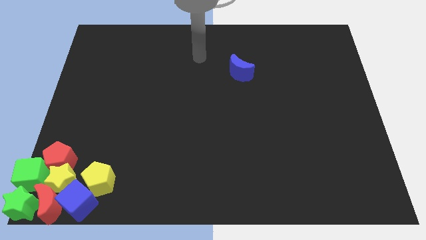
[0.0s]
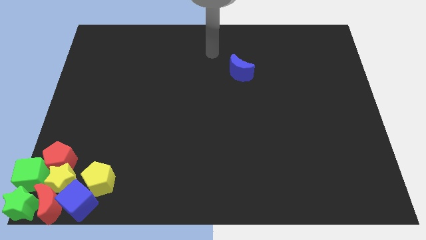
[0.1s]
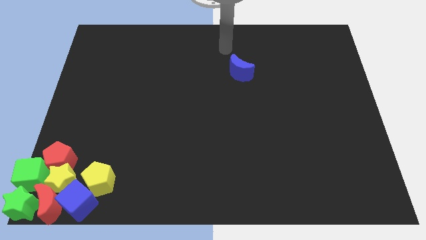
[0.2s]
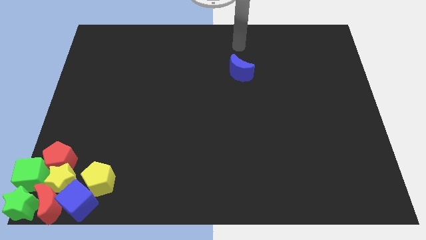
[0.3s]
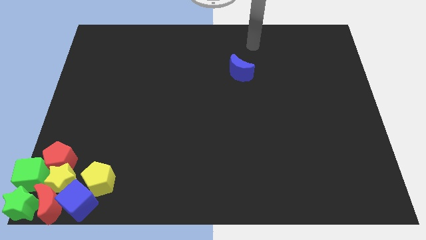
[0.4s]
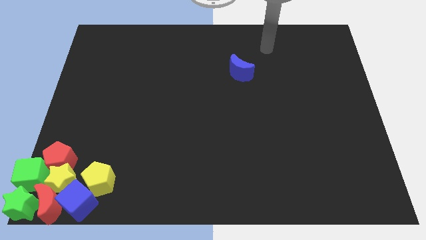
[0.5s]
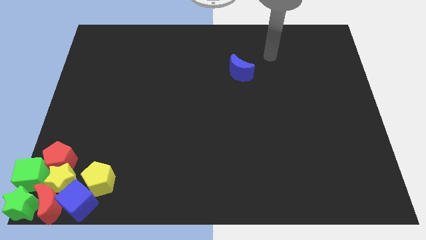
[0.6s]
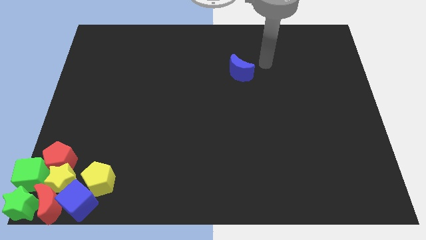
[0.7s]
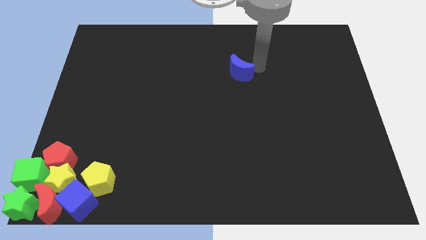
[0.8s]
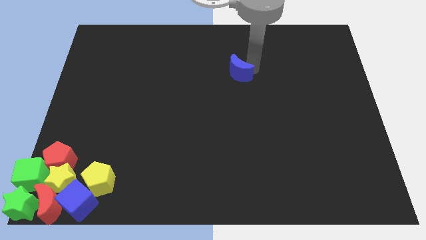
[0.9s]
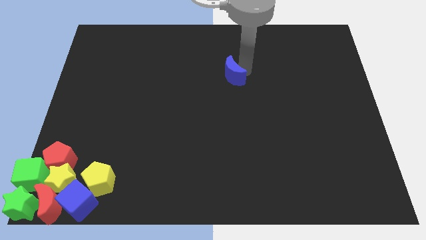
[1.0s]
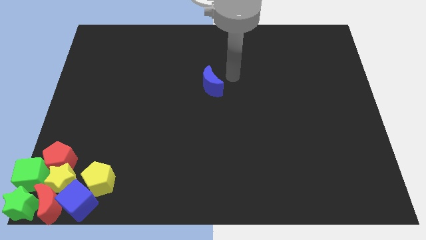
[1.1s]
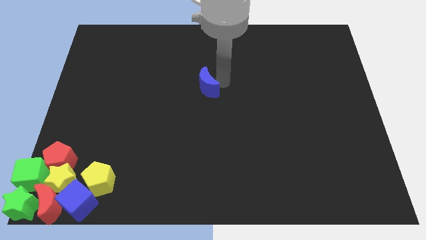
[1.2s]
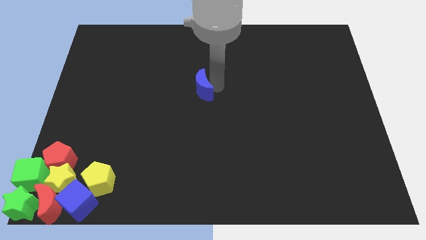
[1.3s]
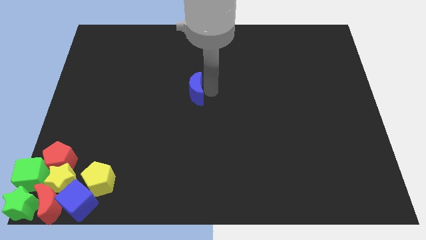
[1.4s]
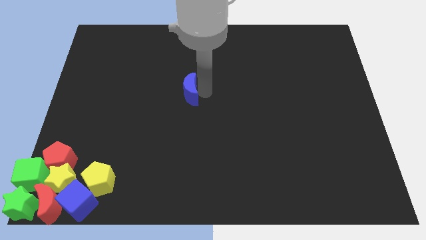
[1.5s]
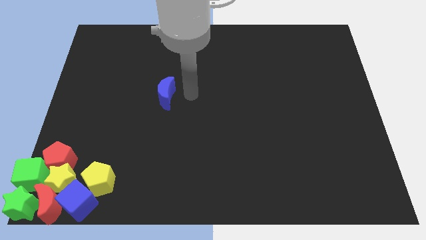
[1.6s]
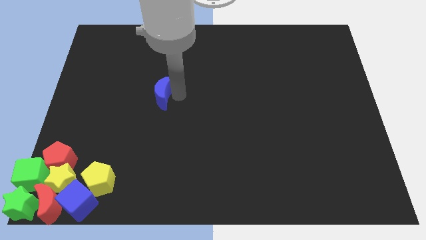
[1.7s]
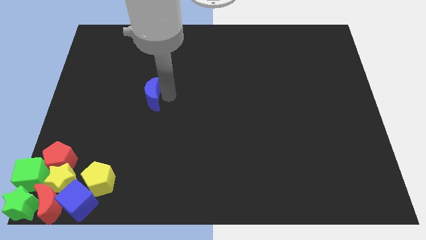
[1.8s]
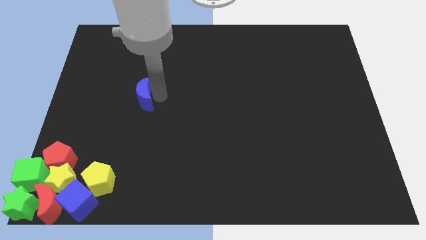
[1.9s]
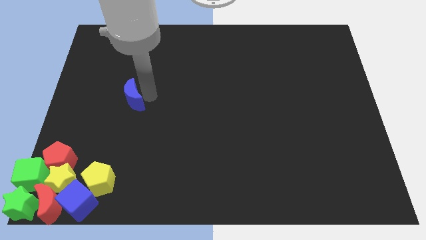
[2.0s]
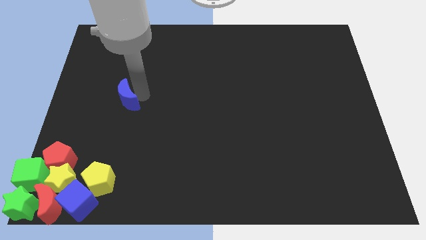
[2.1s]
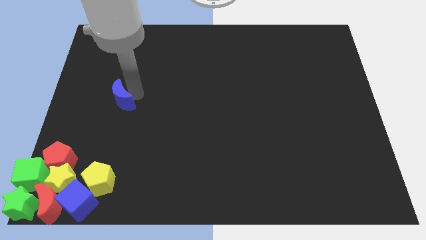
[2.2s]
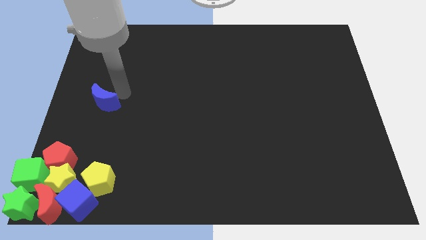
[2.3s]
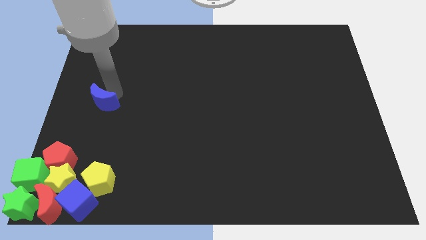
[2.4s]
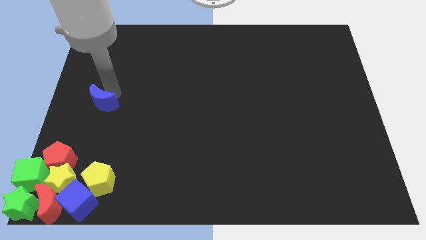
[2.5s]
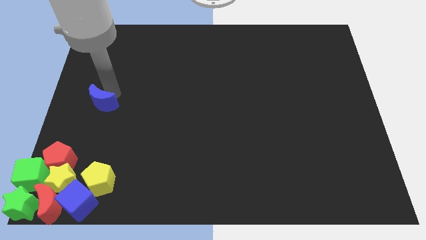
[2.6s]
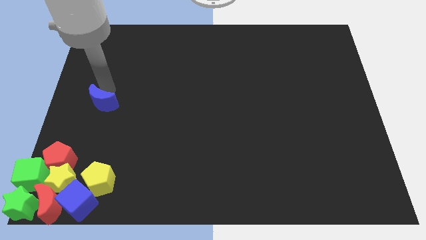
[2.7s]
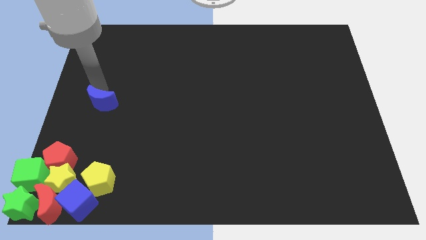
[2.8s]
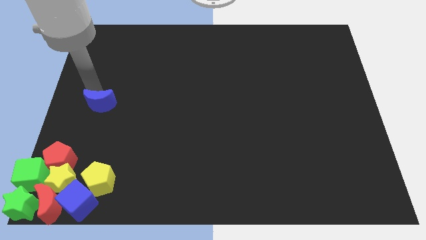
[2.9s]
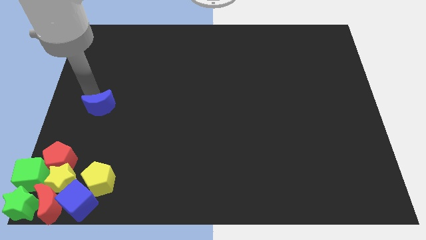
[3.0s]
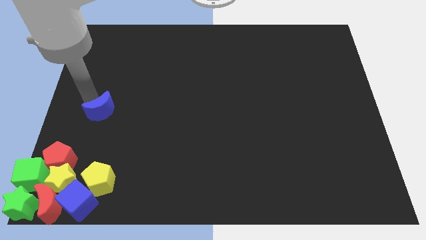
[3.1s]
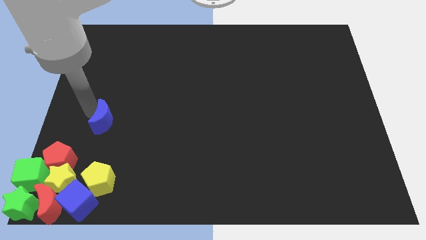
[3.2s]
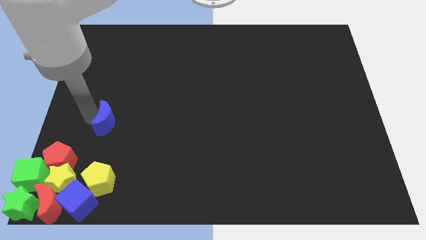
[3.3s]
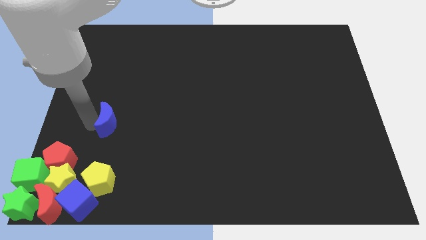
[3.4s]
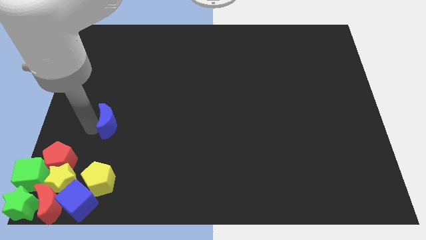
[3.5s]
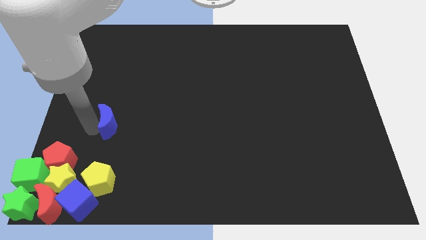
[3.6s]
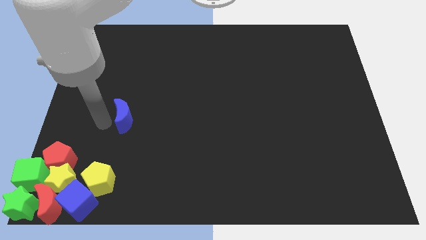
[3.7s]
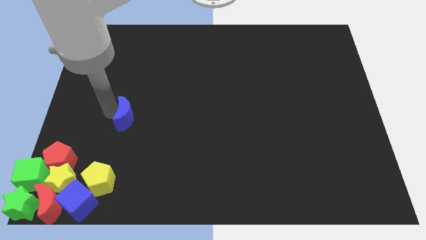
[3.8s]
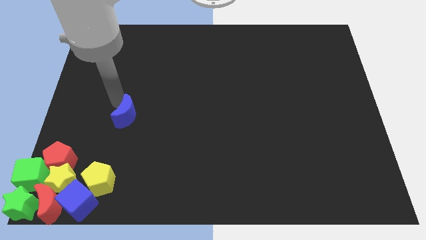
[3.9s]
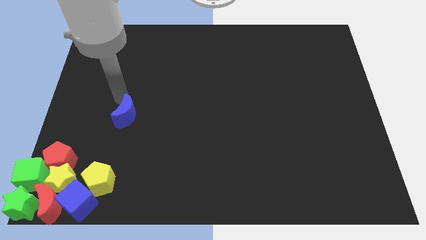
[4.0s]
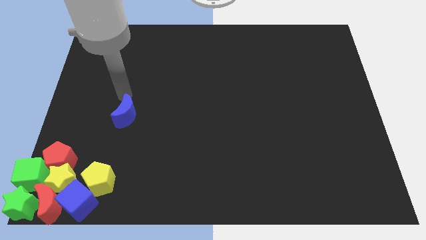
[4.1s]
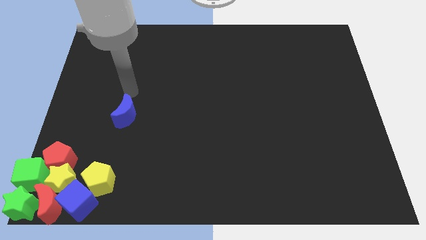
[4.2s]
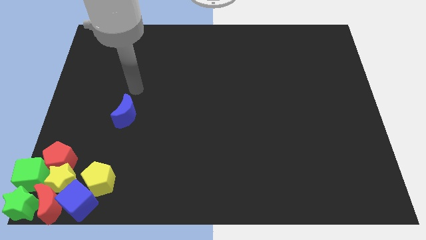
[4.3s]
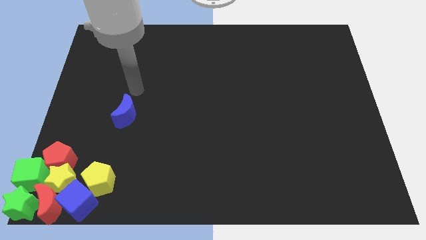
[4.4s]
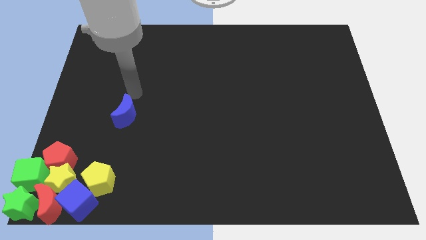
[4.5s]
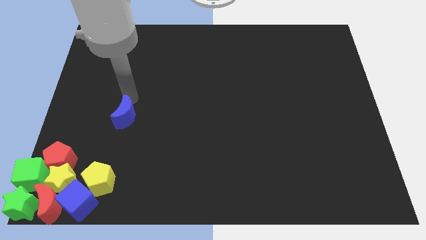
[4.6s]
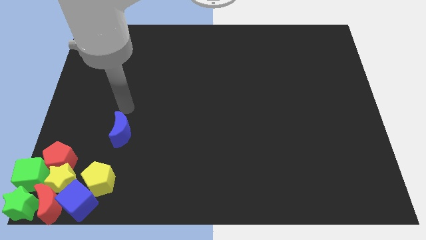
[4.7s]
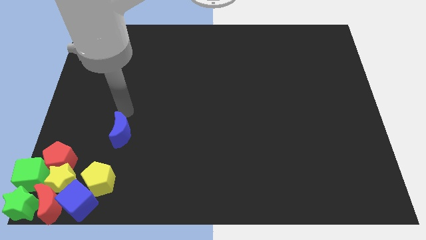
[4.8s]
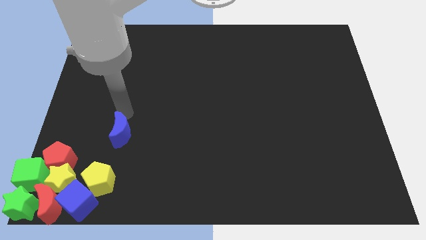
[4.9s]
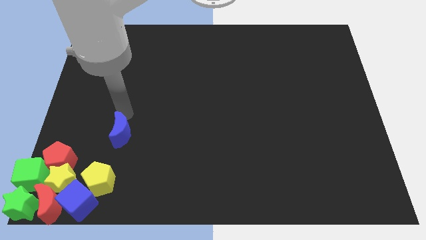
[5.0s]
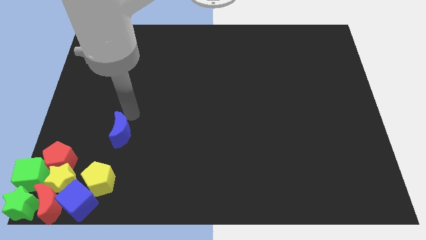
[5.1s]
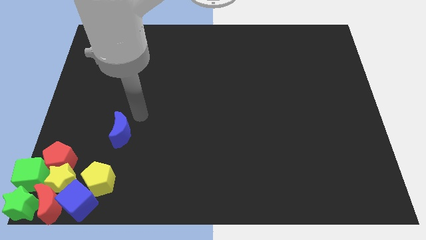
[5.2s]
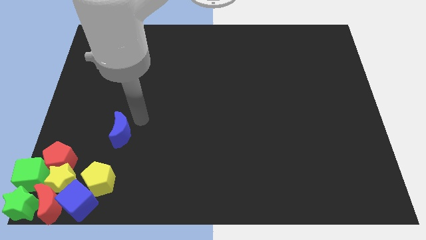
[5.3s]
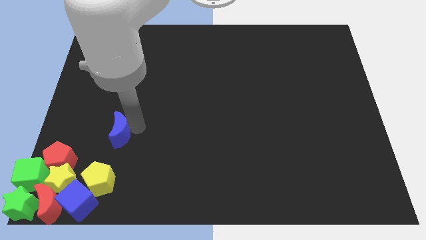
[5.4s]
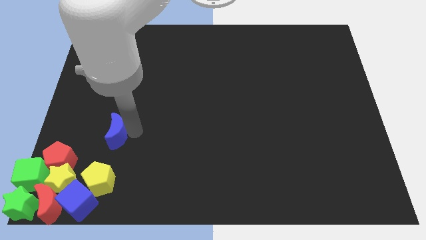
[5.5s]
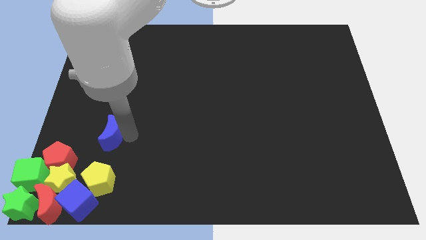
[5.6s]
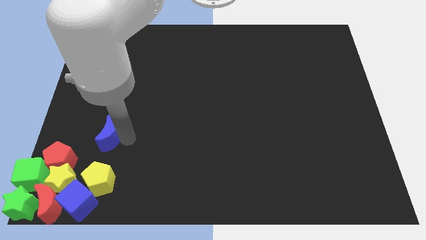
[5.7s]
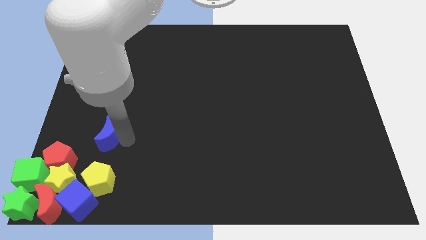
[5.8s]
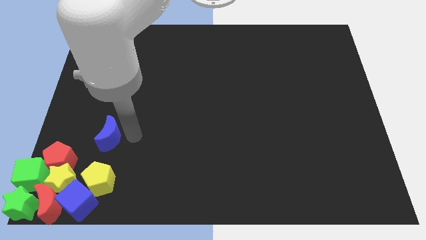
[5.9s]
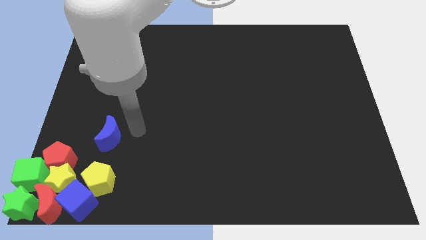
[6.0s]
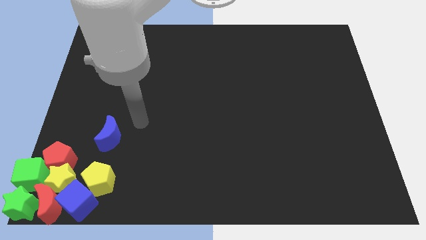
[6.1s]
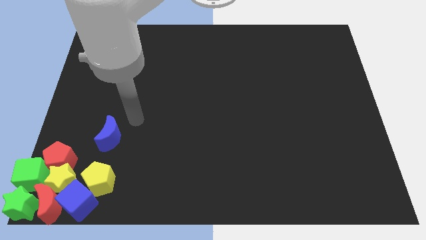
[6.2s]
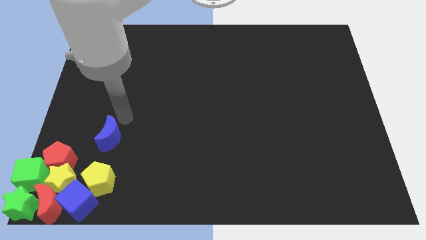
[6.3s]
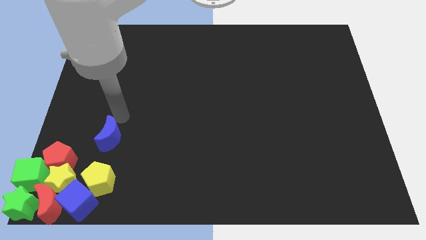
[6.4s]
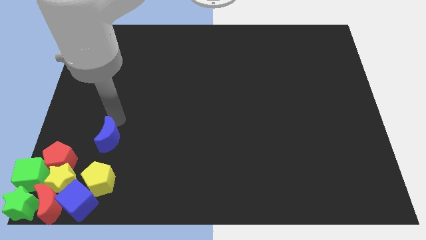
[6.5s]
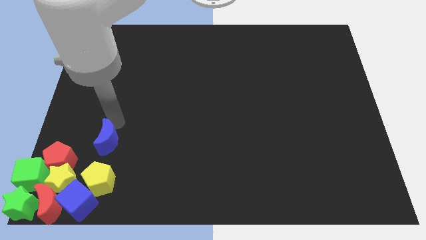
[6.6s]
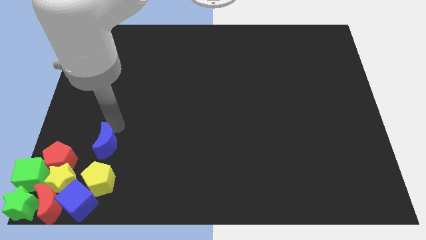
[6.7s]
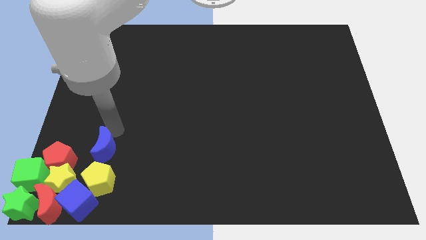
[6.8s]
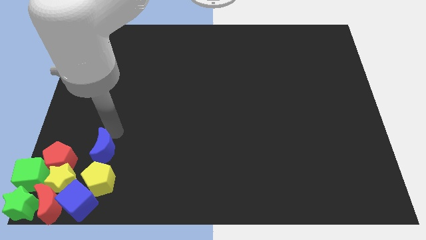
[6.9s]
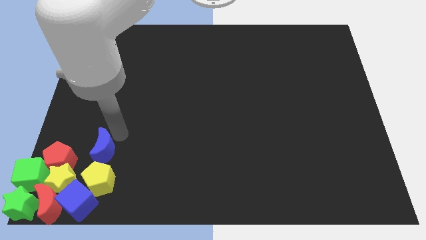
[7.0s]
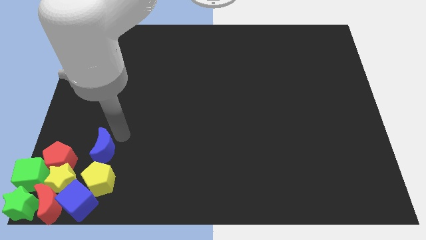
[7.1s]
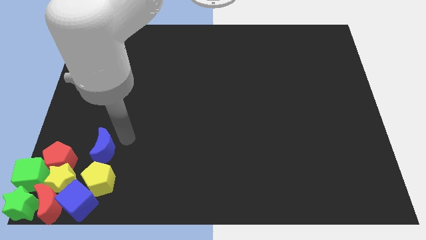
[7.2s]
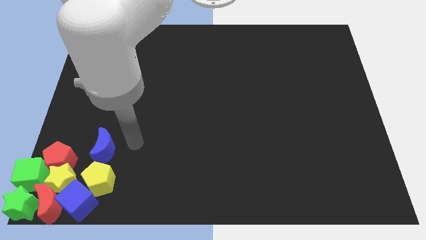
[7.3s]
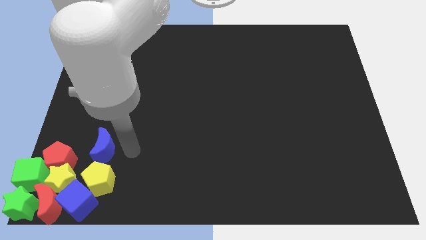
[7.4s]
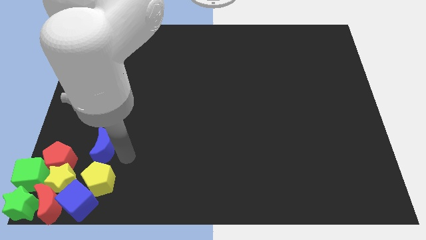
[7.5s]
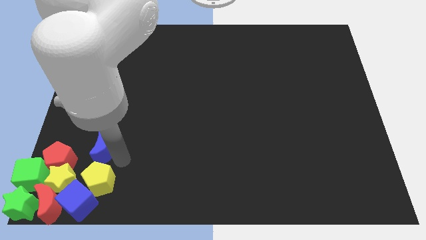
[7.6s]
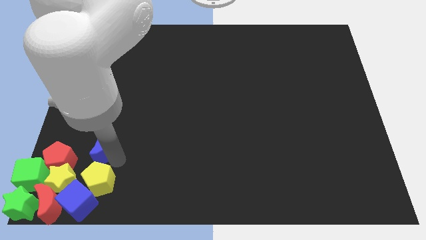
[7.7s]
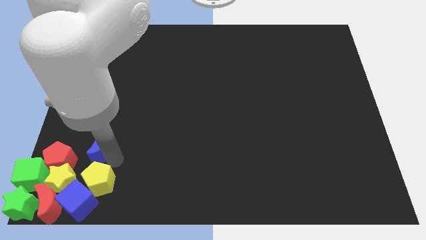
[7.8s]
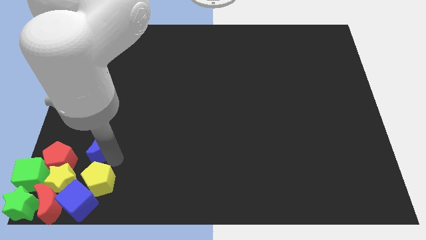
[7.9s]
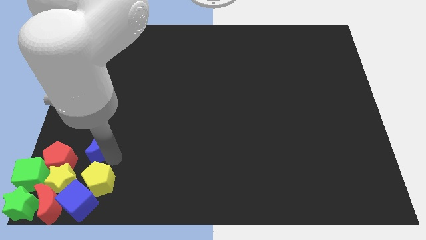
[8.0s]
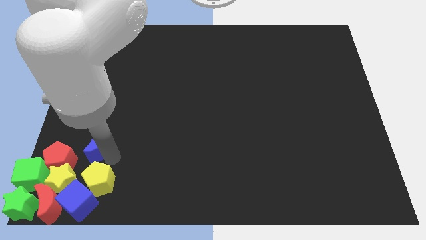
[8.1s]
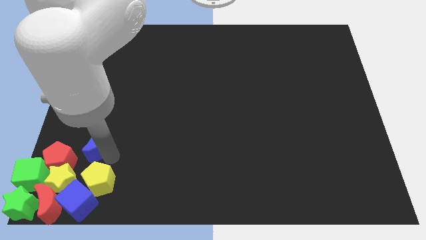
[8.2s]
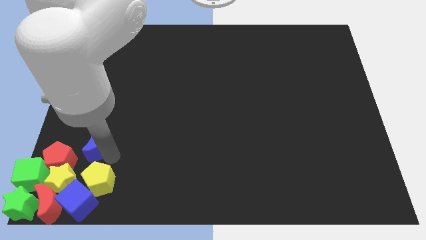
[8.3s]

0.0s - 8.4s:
push the blue crescent into the group of the blocks

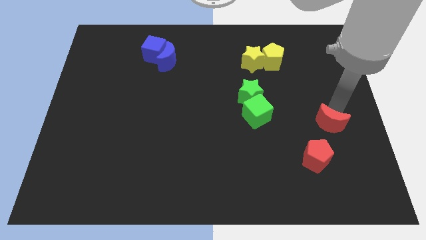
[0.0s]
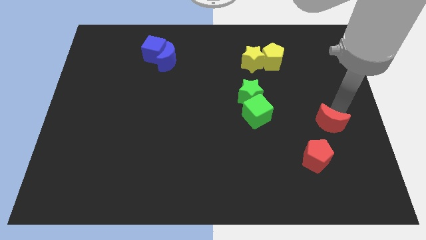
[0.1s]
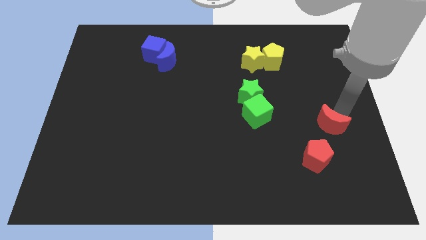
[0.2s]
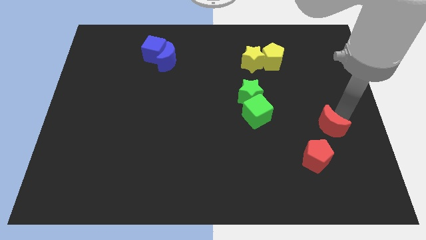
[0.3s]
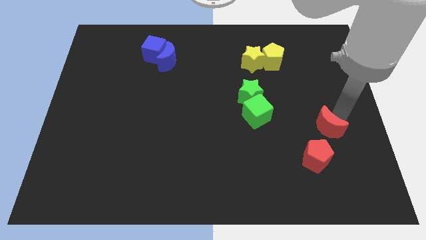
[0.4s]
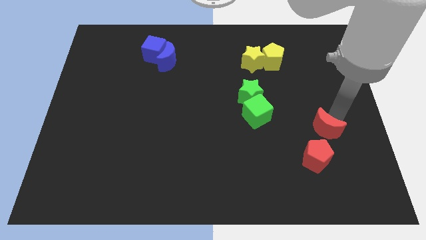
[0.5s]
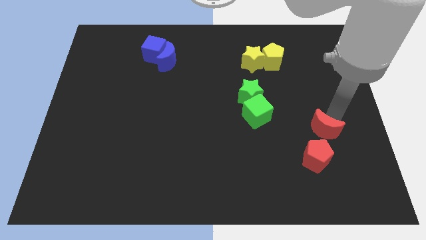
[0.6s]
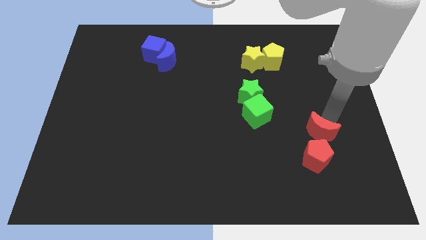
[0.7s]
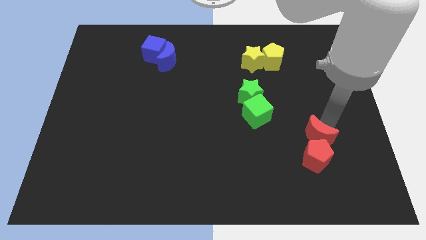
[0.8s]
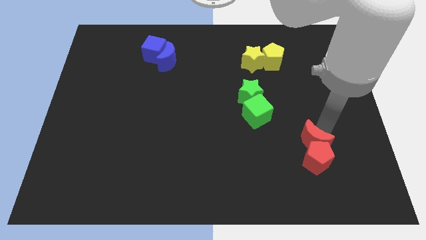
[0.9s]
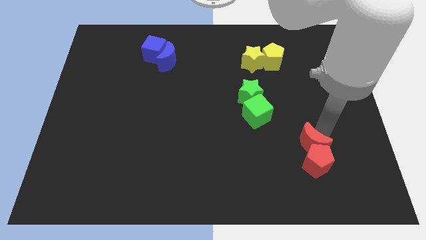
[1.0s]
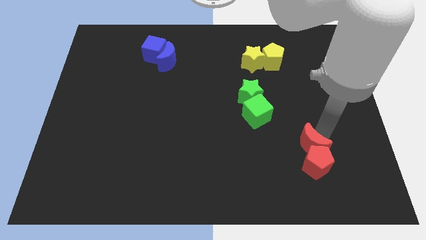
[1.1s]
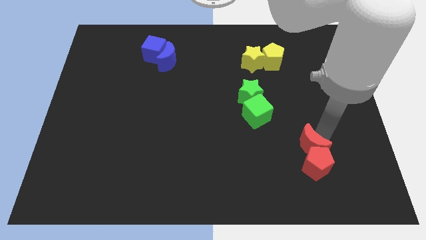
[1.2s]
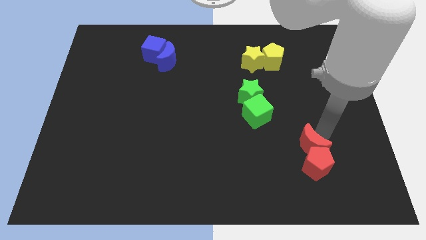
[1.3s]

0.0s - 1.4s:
push the red moon into the red pentagon
